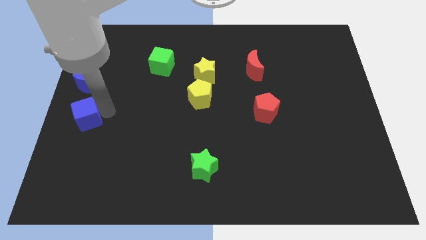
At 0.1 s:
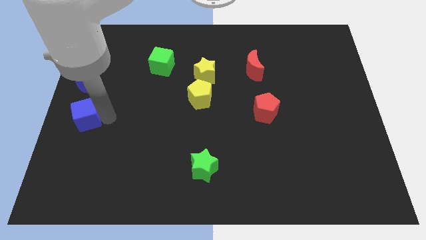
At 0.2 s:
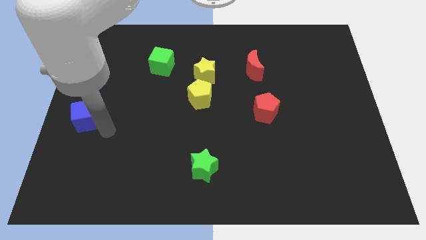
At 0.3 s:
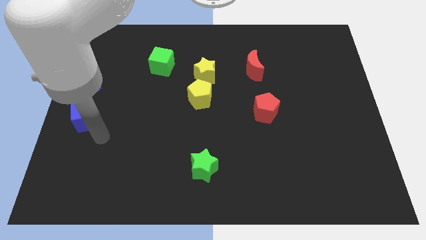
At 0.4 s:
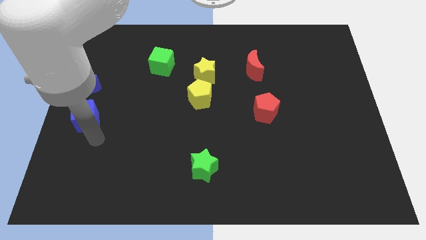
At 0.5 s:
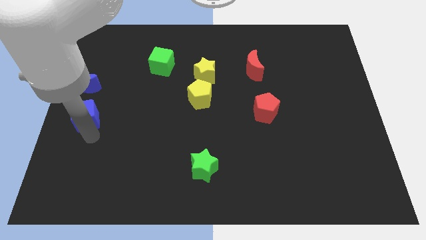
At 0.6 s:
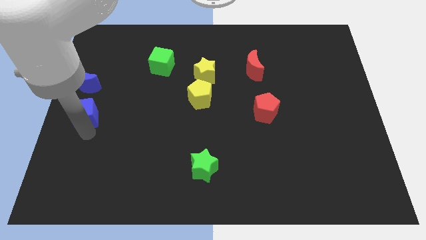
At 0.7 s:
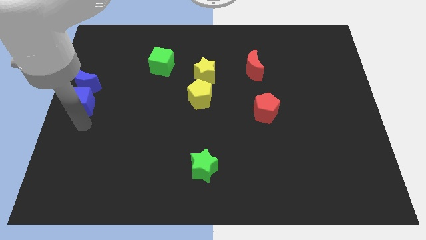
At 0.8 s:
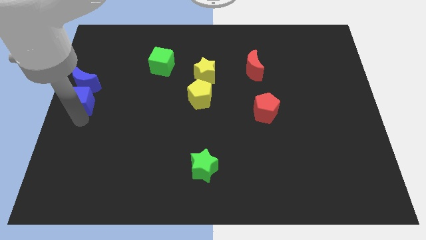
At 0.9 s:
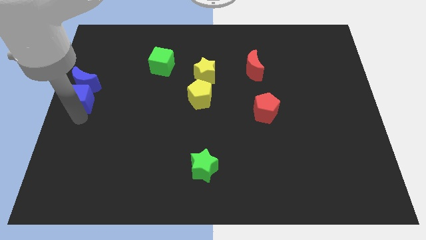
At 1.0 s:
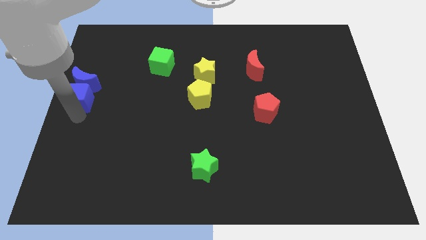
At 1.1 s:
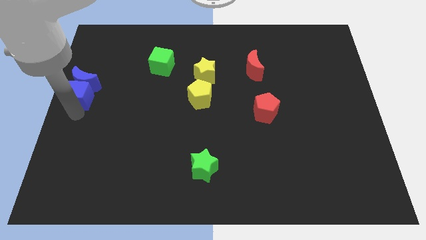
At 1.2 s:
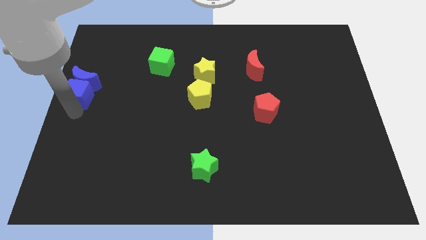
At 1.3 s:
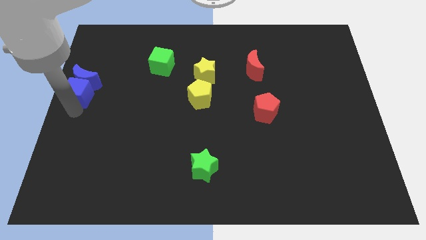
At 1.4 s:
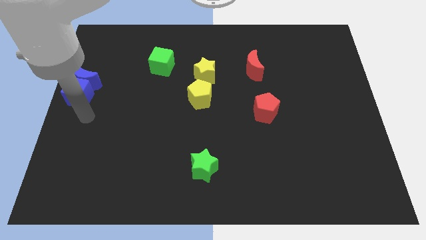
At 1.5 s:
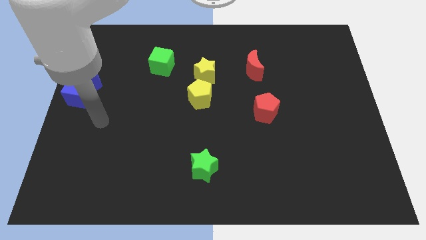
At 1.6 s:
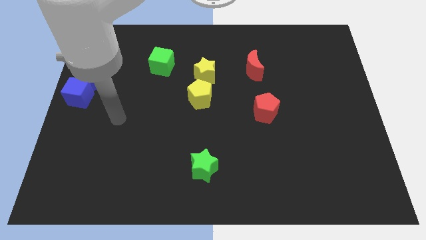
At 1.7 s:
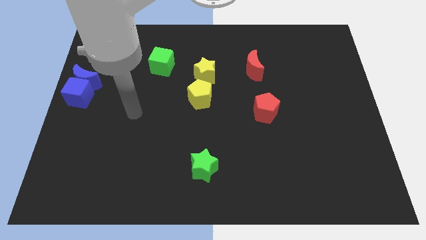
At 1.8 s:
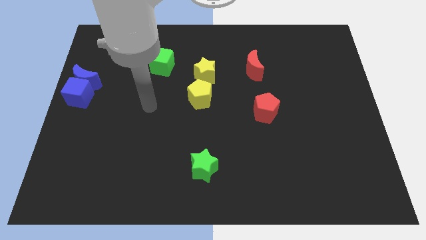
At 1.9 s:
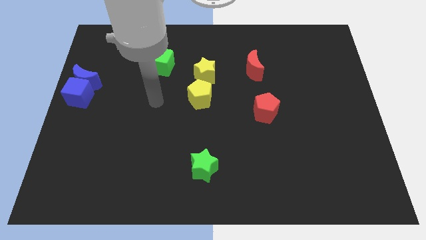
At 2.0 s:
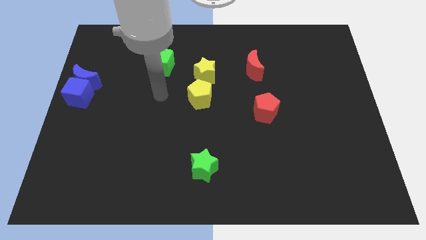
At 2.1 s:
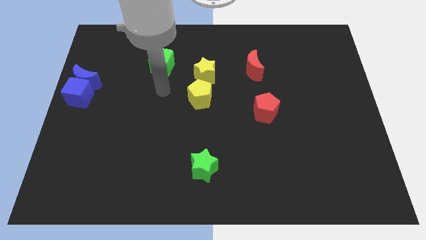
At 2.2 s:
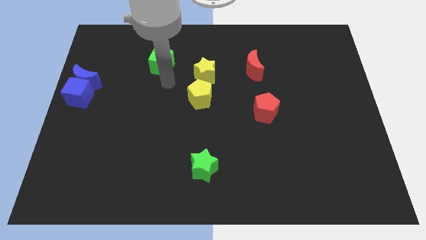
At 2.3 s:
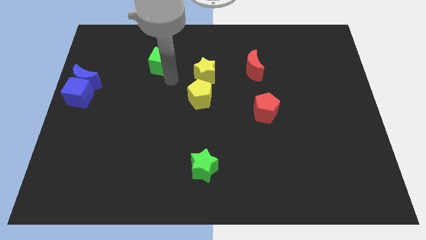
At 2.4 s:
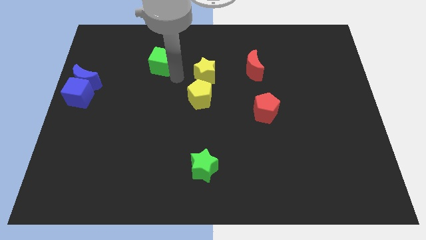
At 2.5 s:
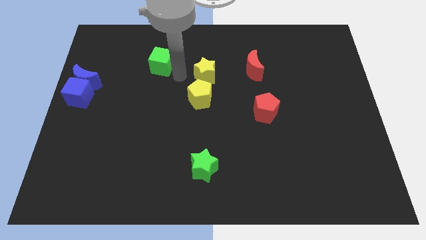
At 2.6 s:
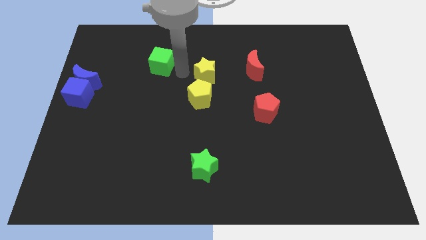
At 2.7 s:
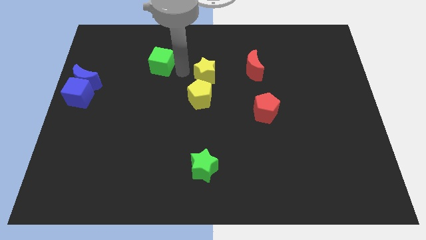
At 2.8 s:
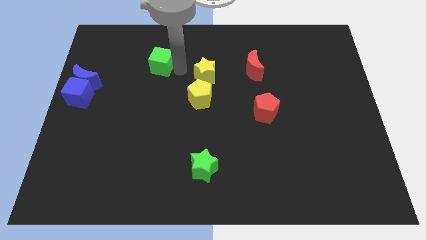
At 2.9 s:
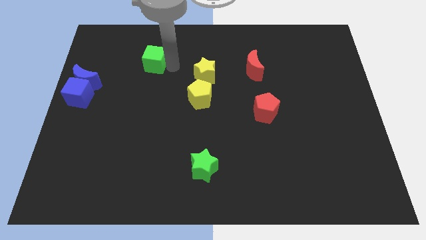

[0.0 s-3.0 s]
place the arm right to the green cube

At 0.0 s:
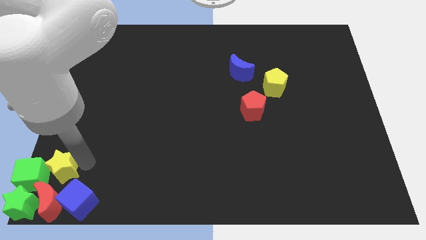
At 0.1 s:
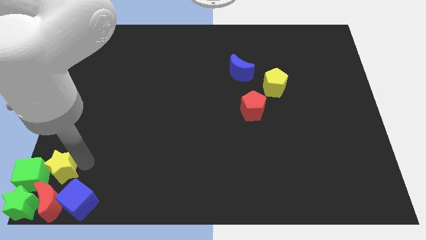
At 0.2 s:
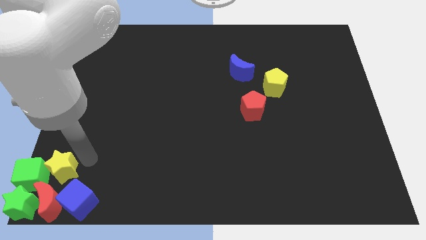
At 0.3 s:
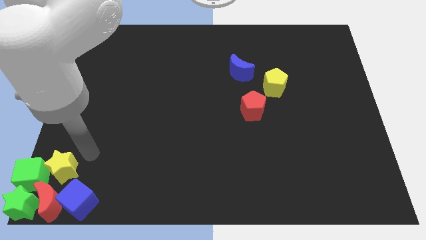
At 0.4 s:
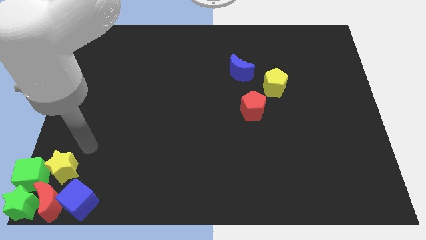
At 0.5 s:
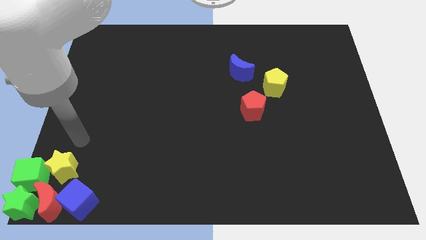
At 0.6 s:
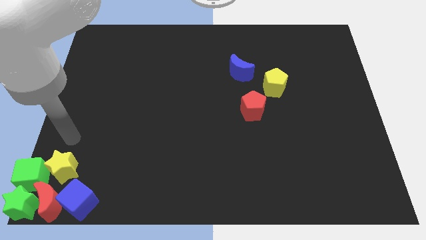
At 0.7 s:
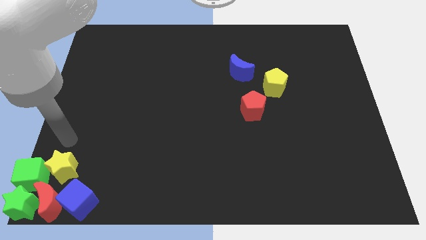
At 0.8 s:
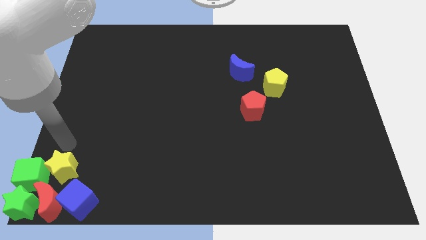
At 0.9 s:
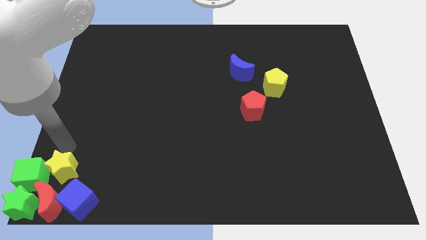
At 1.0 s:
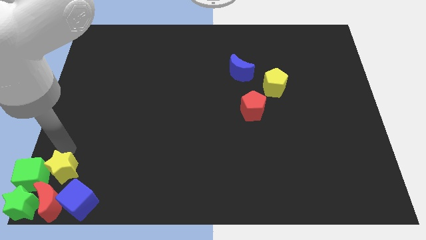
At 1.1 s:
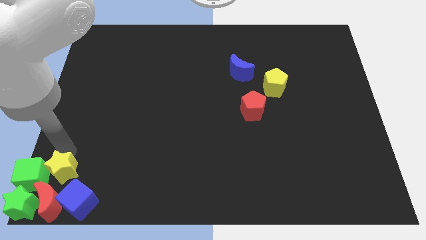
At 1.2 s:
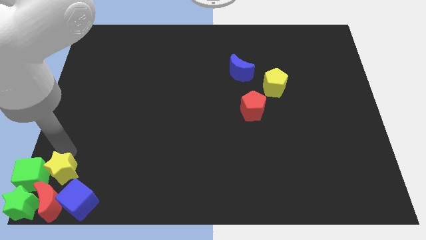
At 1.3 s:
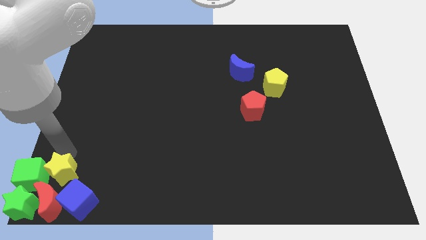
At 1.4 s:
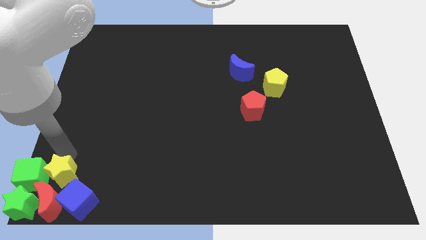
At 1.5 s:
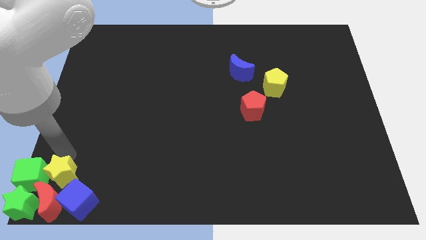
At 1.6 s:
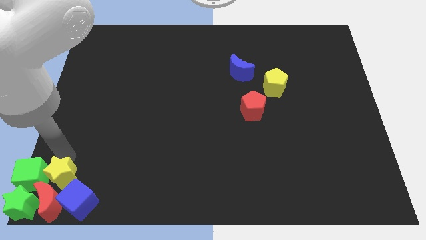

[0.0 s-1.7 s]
place the yellow star to the right of the green cube

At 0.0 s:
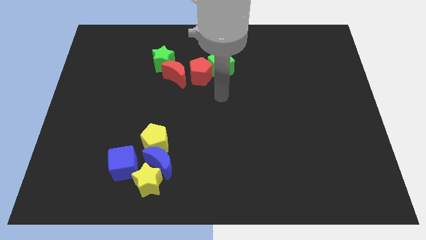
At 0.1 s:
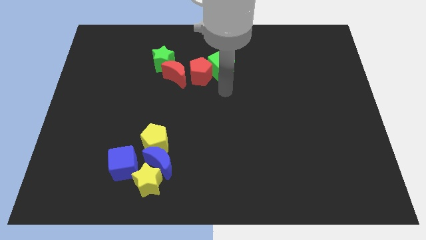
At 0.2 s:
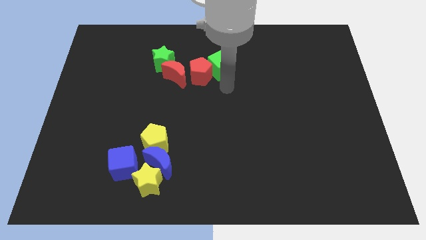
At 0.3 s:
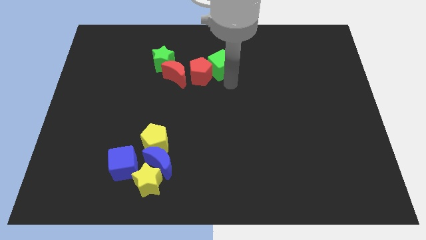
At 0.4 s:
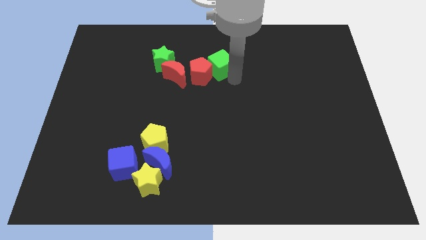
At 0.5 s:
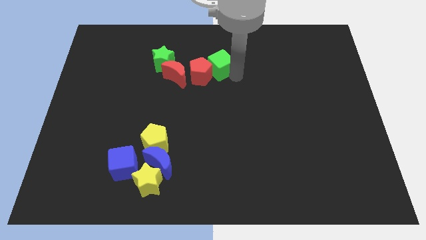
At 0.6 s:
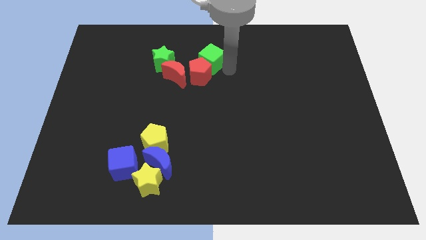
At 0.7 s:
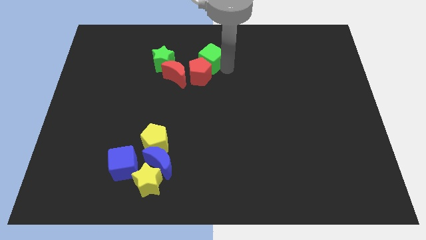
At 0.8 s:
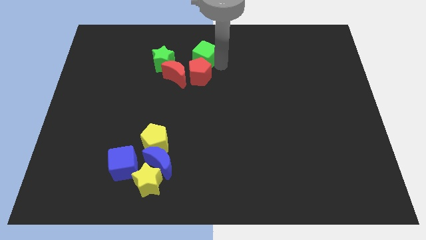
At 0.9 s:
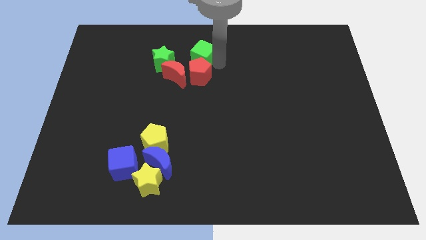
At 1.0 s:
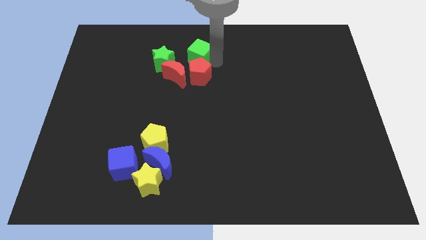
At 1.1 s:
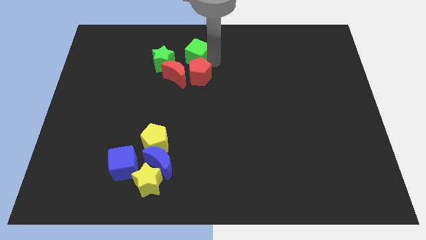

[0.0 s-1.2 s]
place the green cube above the red pentagon

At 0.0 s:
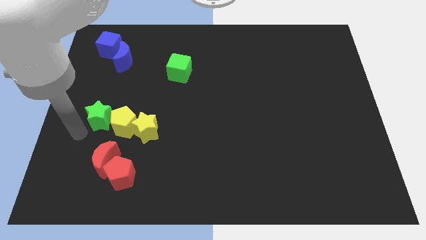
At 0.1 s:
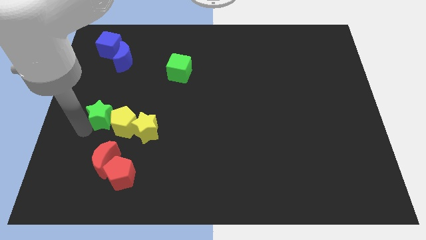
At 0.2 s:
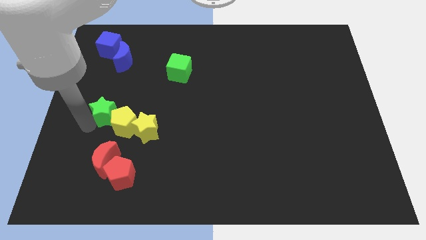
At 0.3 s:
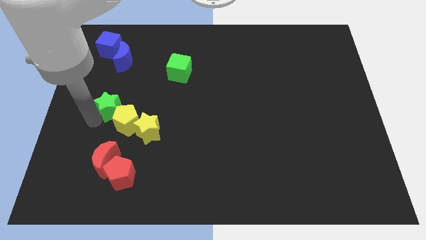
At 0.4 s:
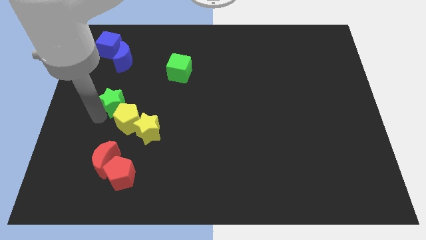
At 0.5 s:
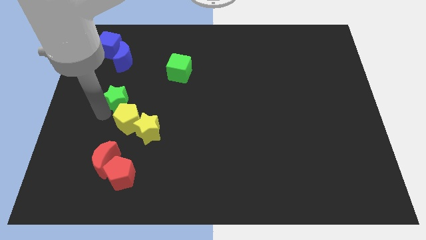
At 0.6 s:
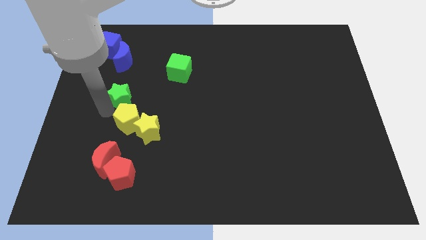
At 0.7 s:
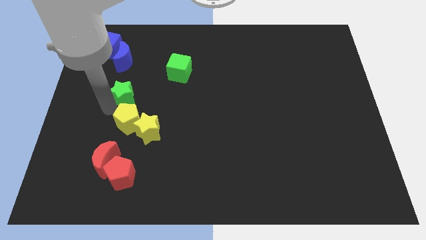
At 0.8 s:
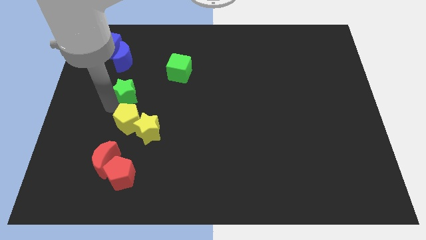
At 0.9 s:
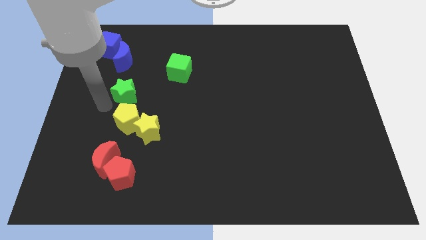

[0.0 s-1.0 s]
place the green star above the yellow pentagon

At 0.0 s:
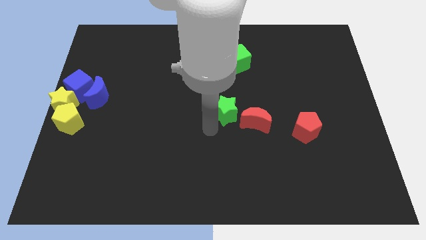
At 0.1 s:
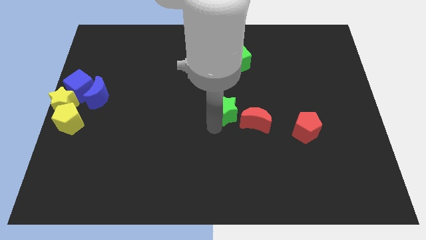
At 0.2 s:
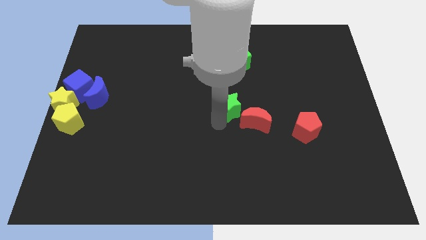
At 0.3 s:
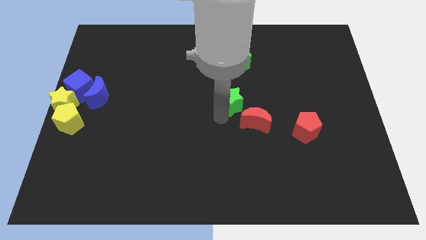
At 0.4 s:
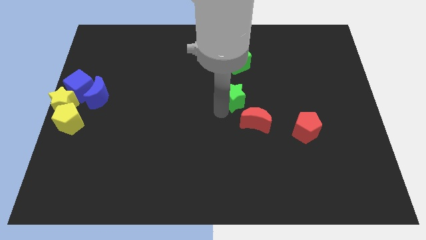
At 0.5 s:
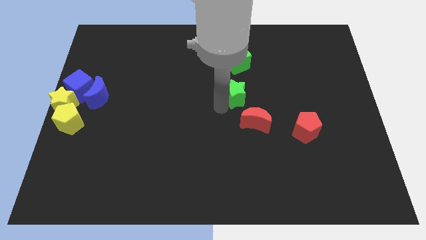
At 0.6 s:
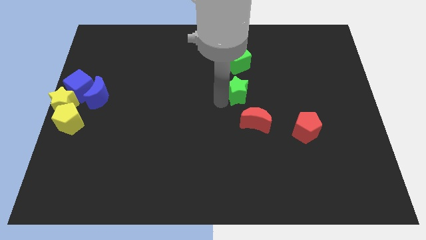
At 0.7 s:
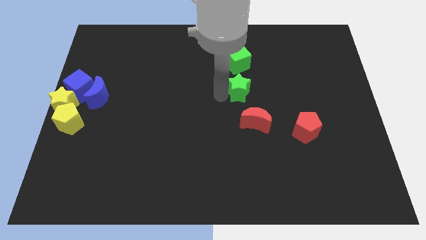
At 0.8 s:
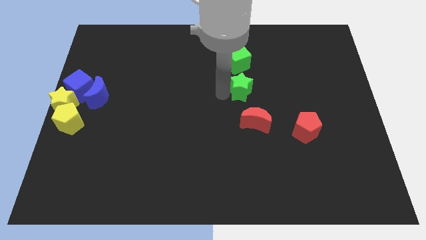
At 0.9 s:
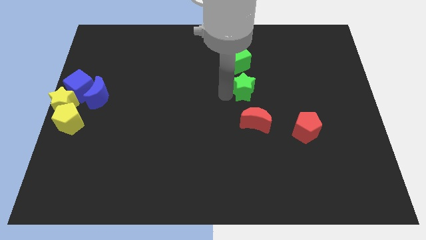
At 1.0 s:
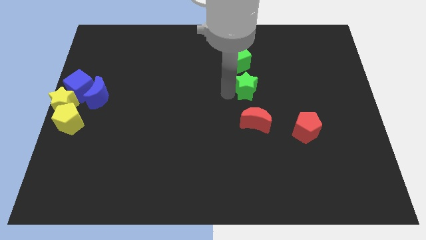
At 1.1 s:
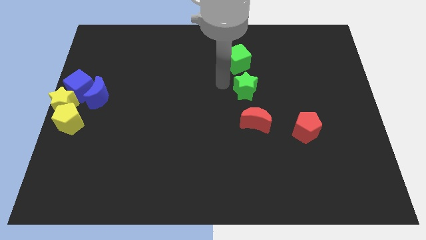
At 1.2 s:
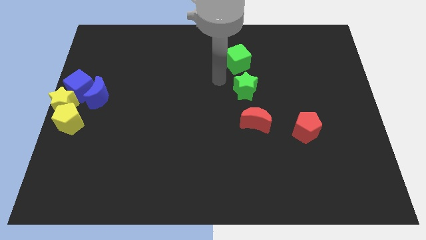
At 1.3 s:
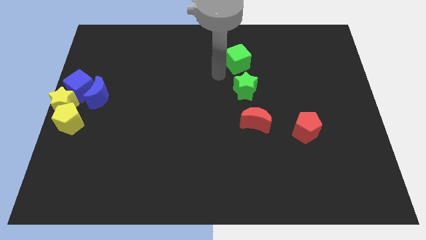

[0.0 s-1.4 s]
place the green star vertically above the red moon

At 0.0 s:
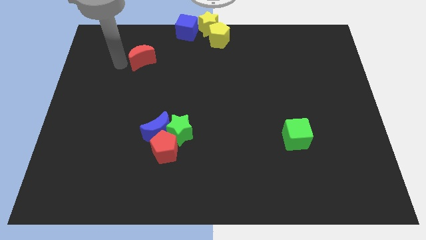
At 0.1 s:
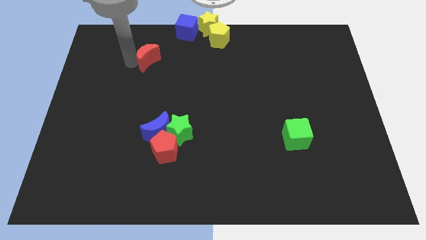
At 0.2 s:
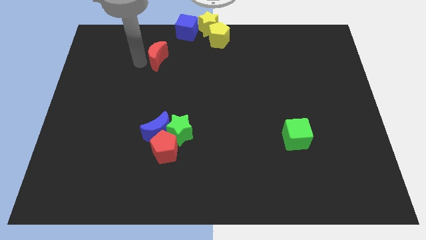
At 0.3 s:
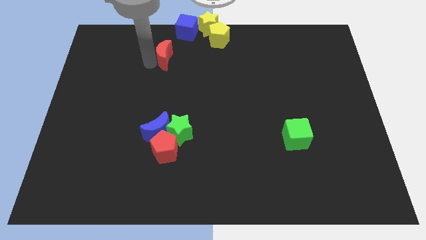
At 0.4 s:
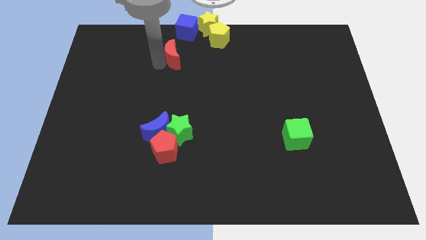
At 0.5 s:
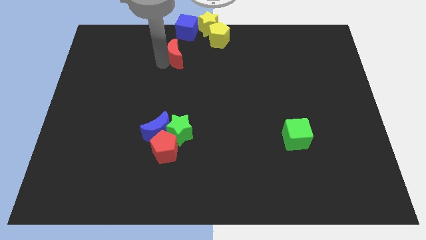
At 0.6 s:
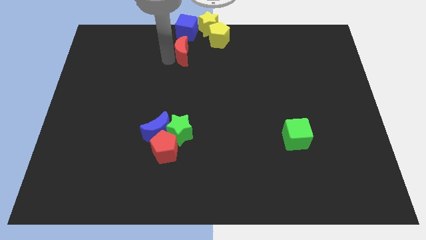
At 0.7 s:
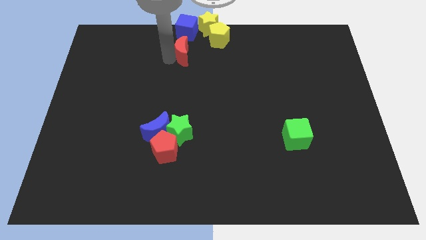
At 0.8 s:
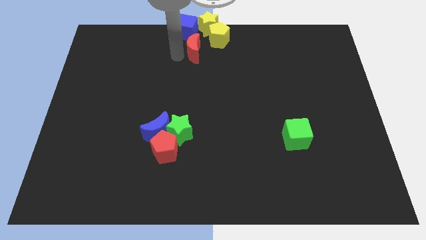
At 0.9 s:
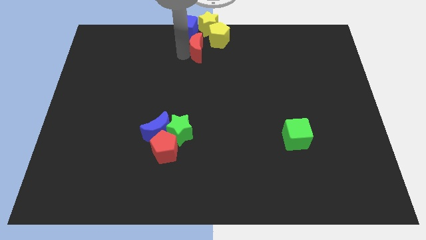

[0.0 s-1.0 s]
move the red crescent towards yellow pentagon
